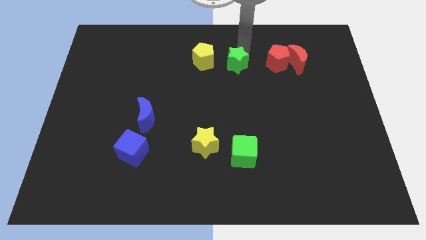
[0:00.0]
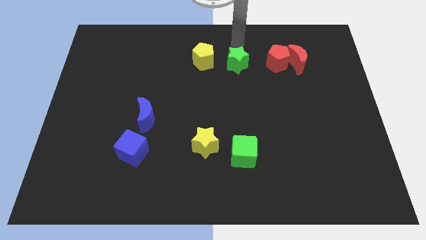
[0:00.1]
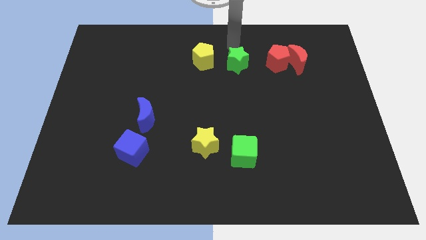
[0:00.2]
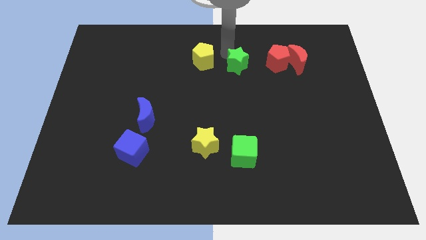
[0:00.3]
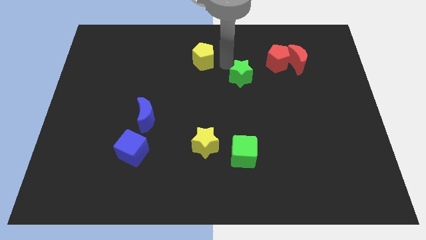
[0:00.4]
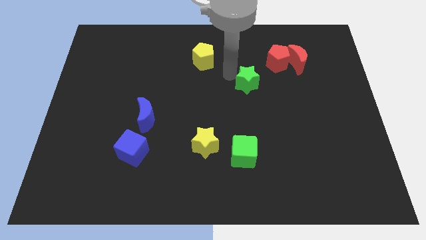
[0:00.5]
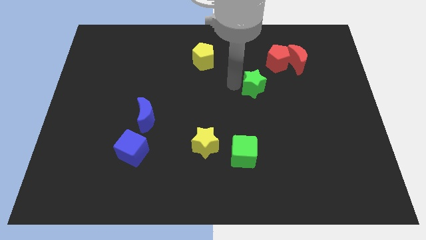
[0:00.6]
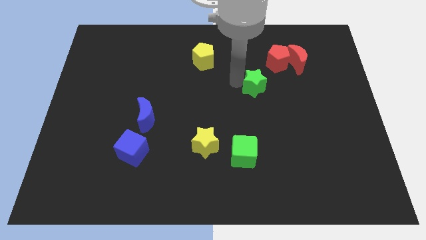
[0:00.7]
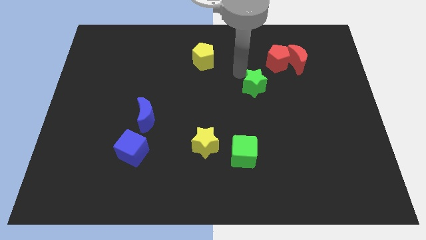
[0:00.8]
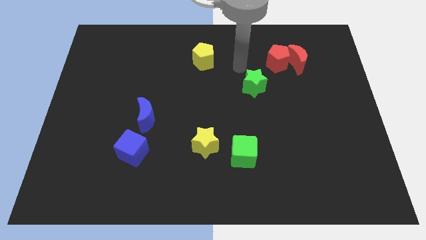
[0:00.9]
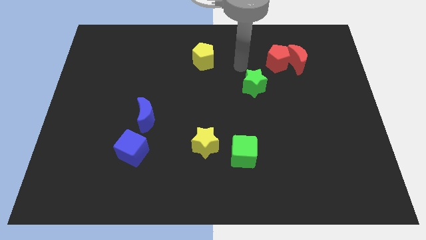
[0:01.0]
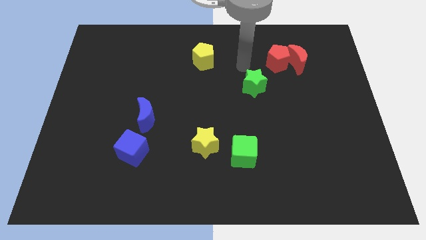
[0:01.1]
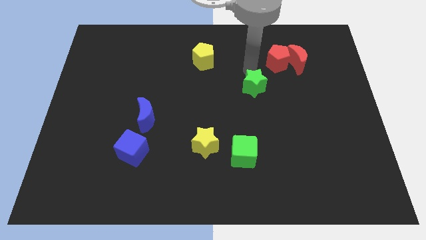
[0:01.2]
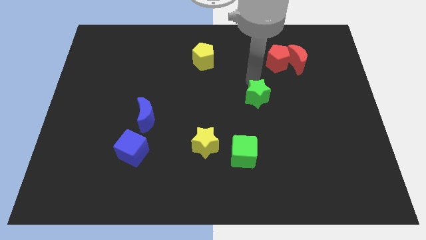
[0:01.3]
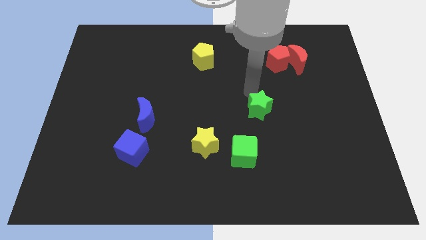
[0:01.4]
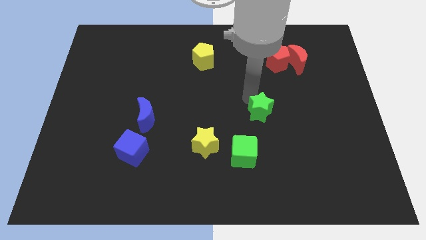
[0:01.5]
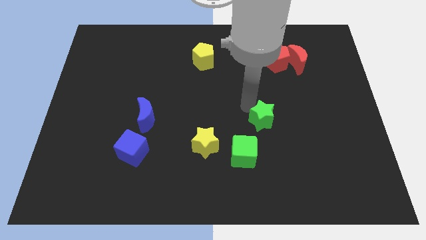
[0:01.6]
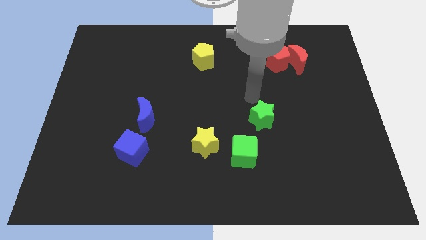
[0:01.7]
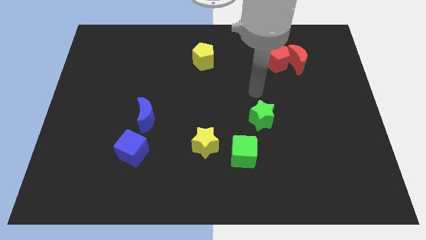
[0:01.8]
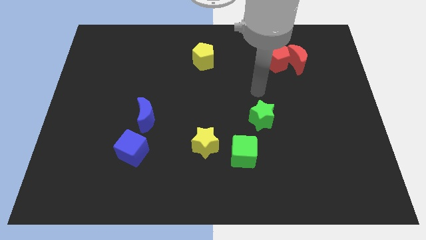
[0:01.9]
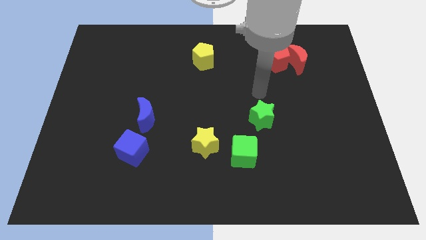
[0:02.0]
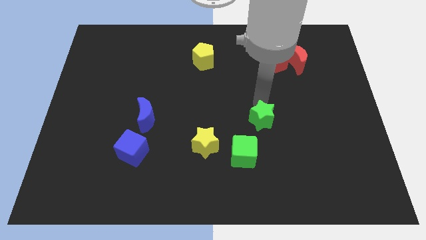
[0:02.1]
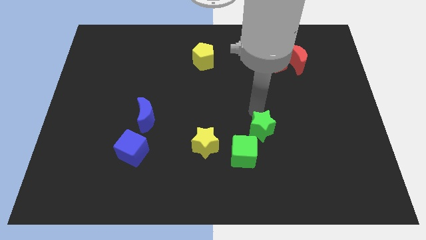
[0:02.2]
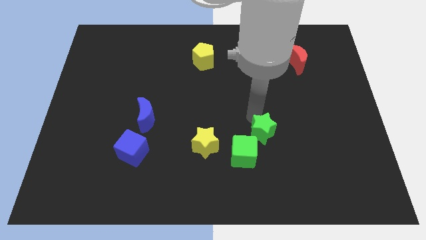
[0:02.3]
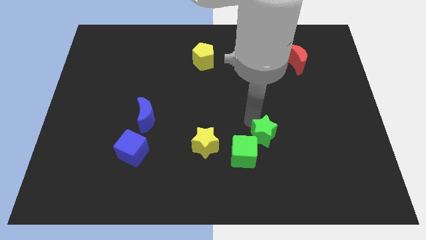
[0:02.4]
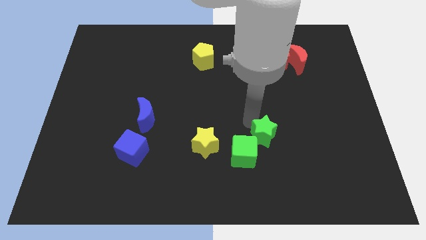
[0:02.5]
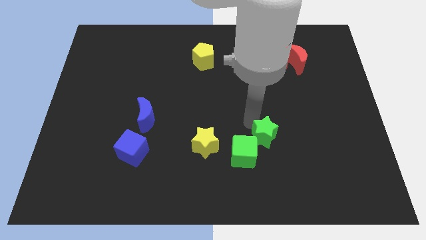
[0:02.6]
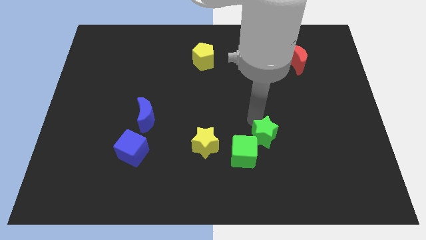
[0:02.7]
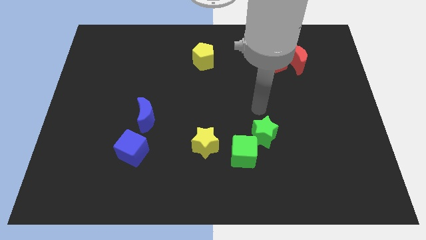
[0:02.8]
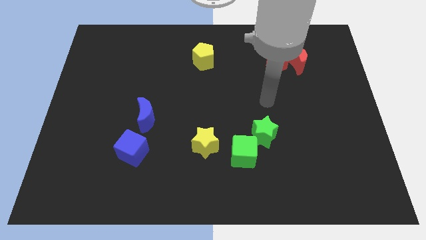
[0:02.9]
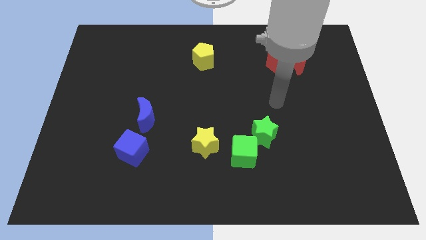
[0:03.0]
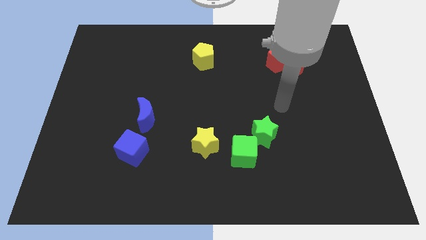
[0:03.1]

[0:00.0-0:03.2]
slide the green star to the top right of green cube

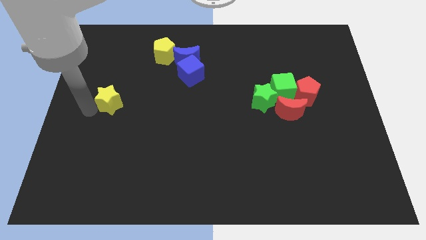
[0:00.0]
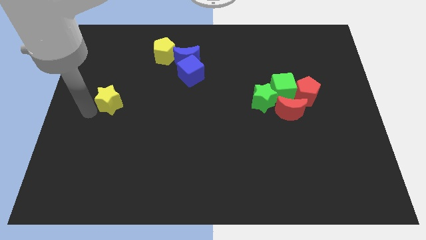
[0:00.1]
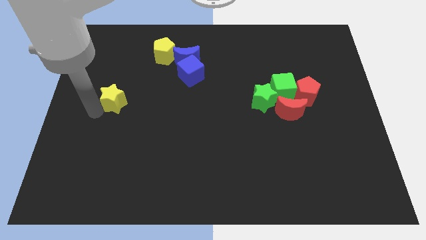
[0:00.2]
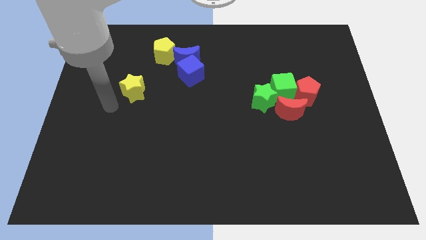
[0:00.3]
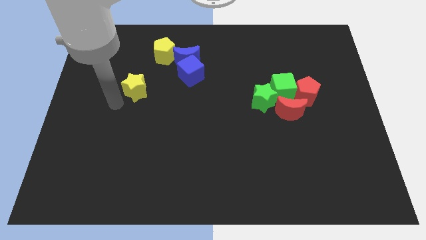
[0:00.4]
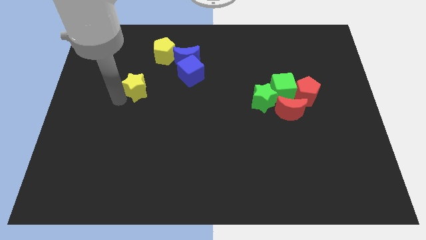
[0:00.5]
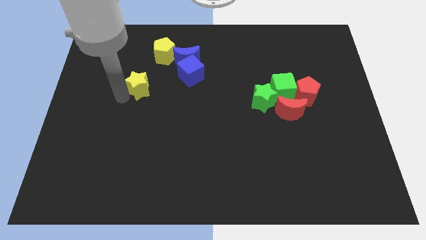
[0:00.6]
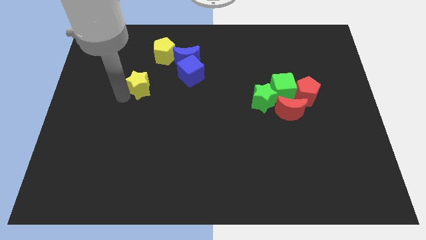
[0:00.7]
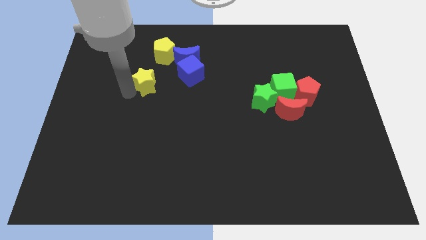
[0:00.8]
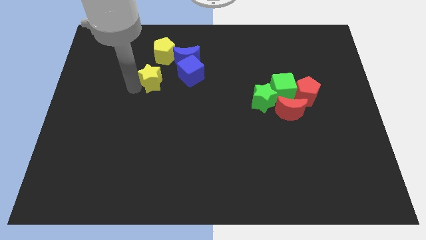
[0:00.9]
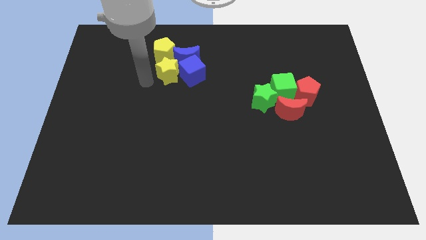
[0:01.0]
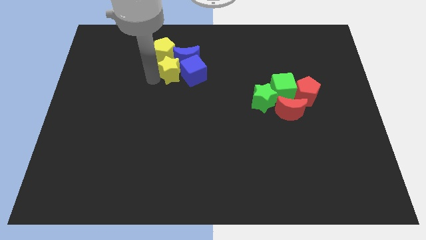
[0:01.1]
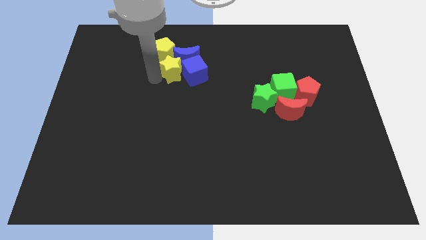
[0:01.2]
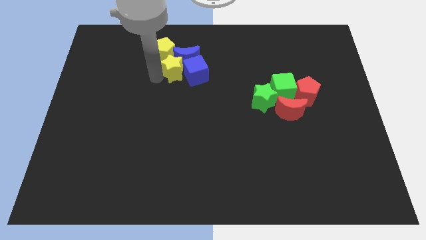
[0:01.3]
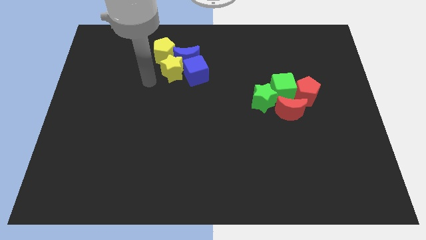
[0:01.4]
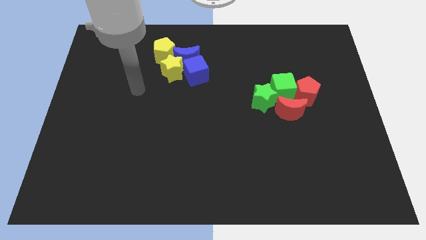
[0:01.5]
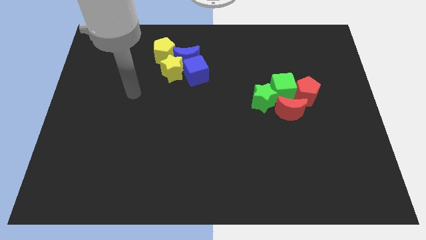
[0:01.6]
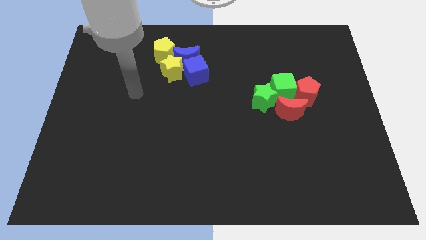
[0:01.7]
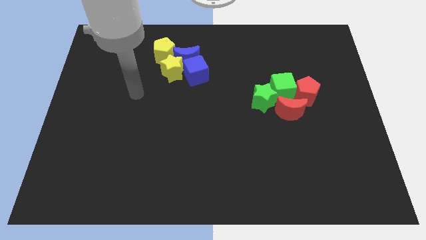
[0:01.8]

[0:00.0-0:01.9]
push the yellow star into the blue cube

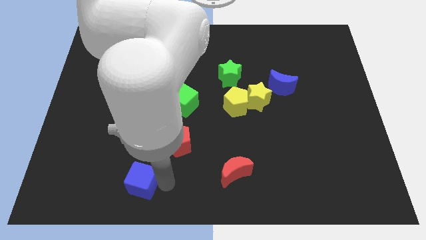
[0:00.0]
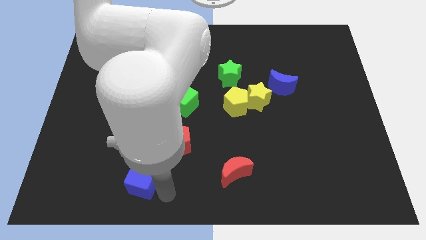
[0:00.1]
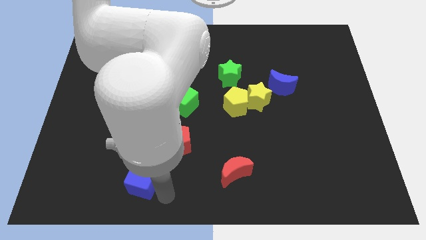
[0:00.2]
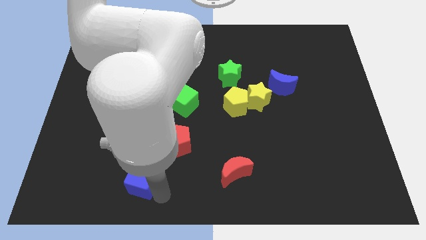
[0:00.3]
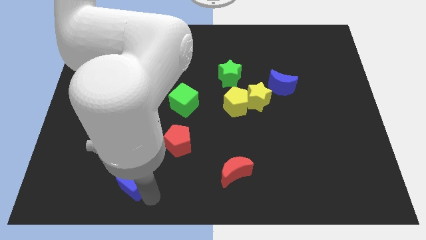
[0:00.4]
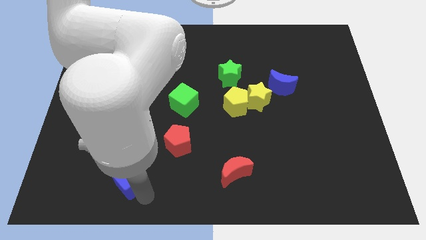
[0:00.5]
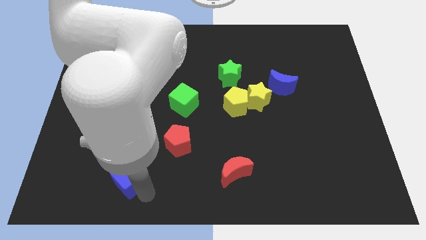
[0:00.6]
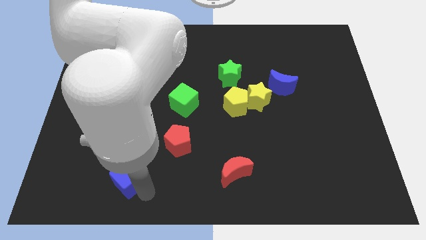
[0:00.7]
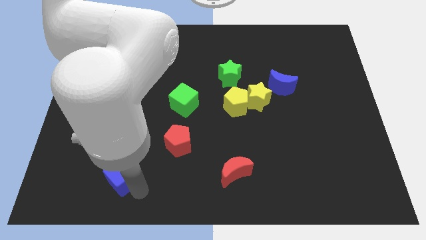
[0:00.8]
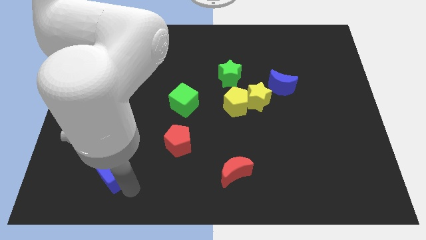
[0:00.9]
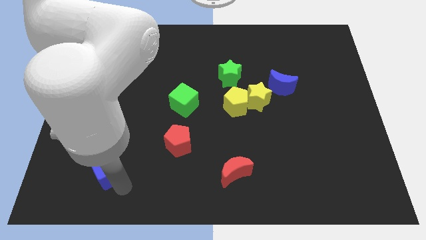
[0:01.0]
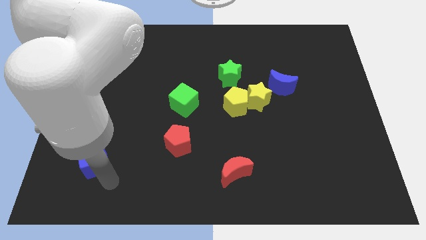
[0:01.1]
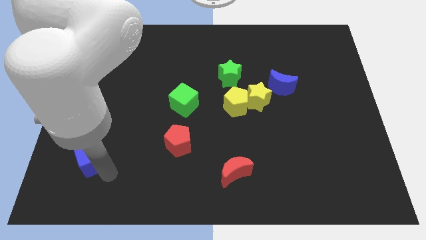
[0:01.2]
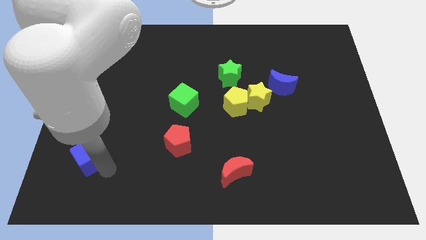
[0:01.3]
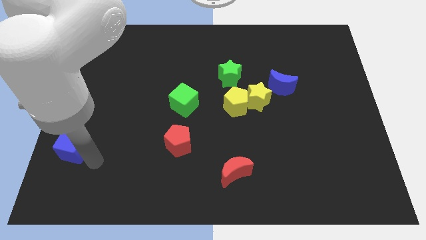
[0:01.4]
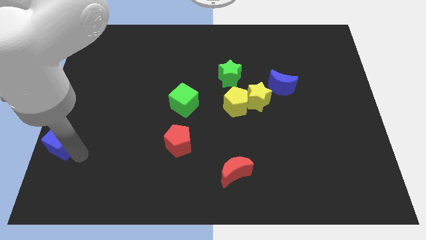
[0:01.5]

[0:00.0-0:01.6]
move the blue cube towards the left side of the board

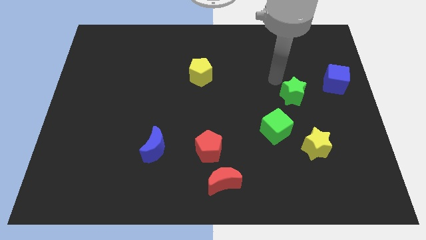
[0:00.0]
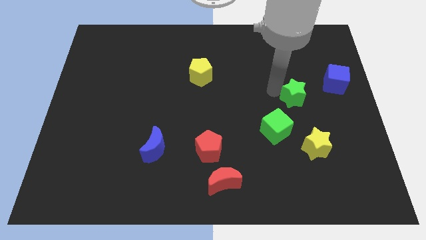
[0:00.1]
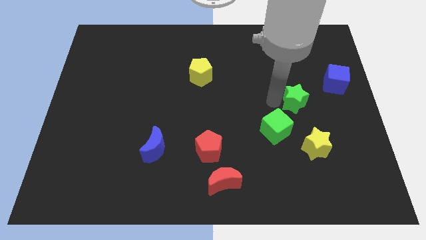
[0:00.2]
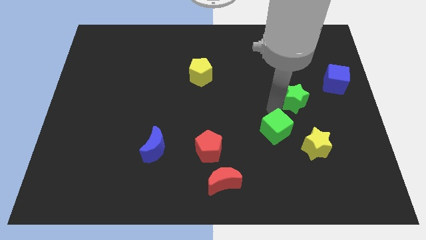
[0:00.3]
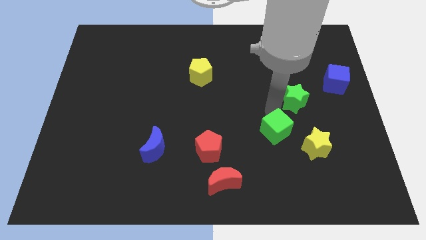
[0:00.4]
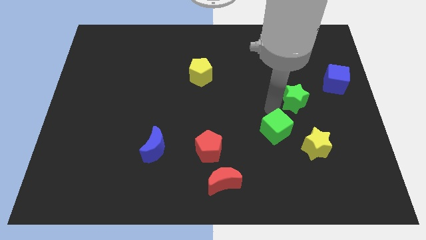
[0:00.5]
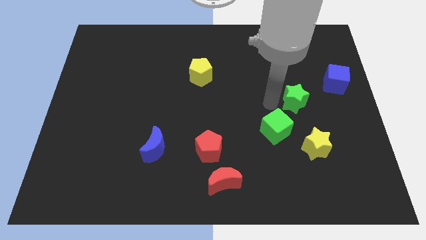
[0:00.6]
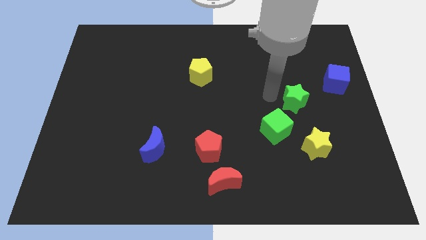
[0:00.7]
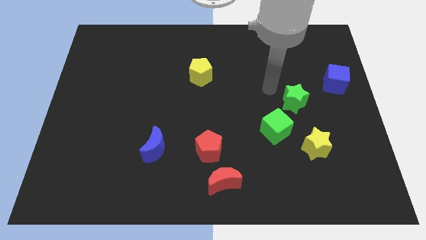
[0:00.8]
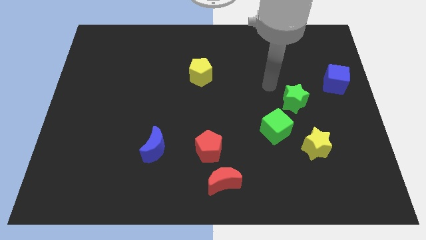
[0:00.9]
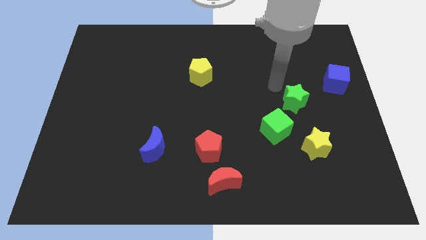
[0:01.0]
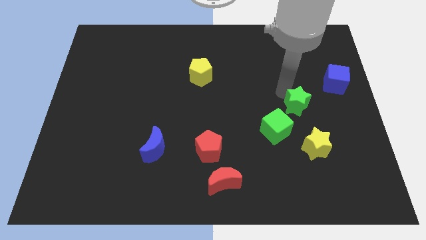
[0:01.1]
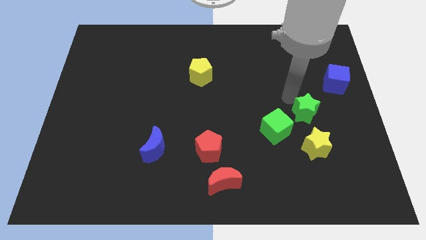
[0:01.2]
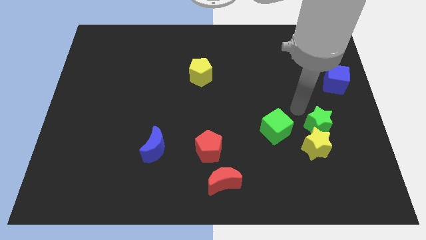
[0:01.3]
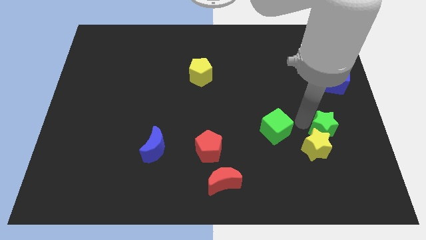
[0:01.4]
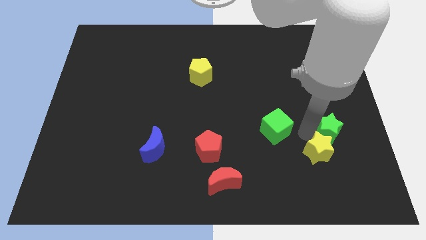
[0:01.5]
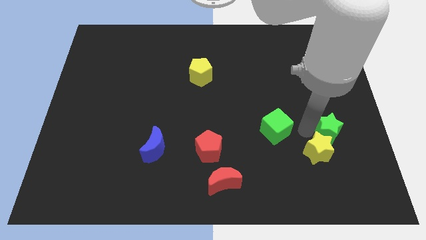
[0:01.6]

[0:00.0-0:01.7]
move the green star into the yellow star

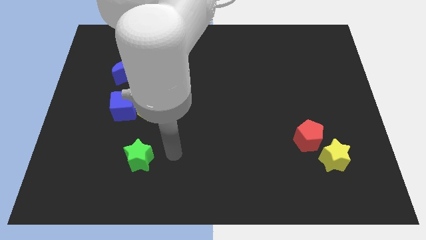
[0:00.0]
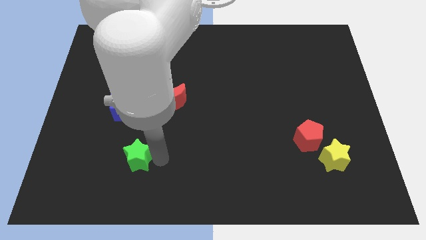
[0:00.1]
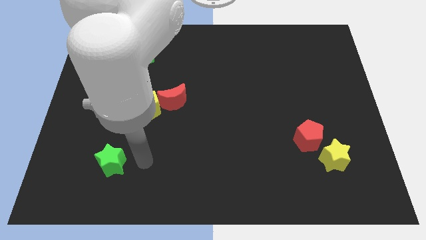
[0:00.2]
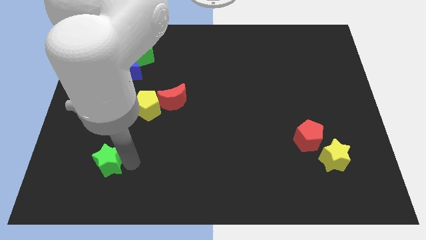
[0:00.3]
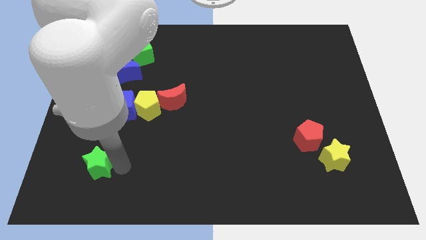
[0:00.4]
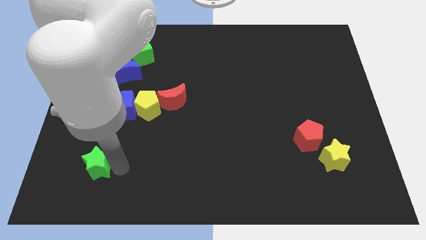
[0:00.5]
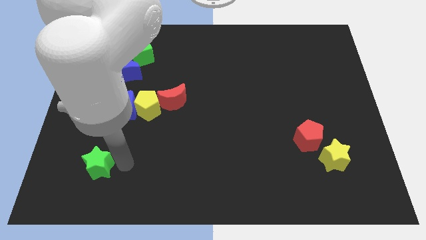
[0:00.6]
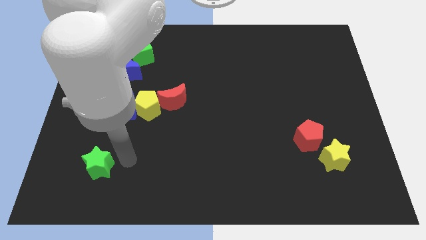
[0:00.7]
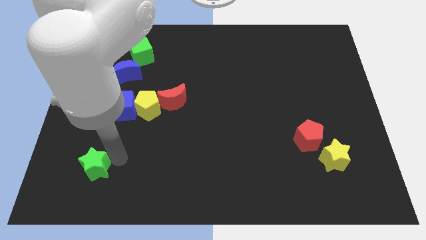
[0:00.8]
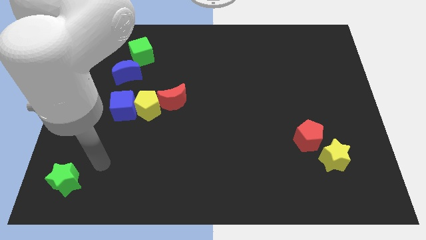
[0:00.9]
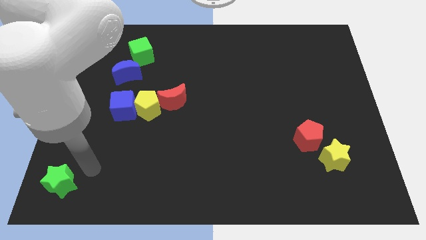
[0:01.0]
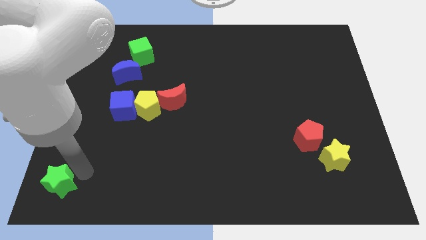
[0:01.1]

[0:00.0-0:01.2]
move the green star towards the bottom left corner
